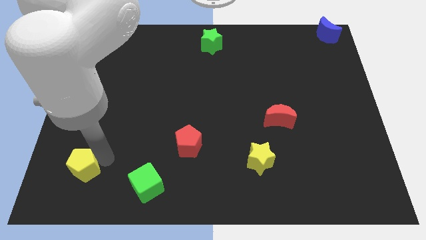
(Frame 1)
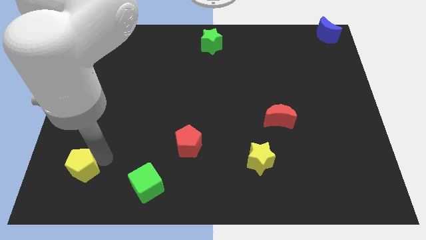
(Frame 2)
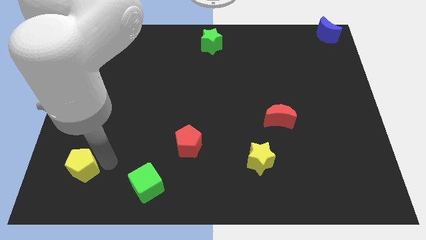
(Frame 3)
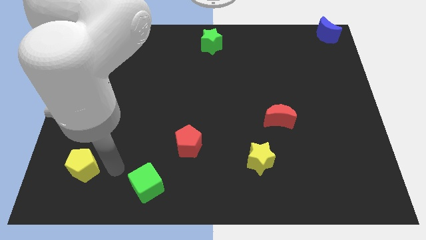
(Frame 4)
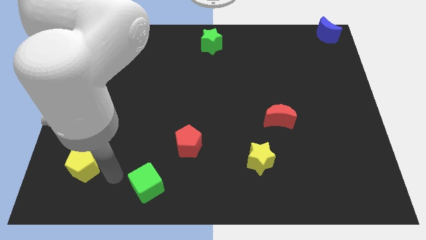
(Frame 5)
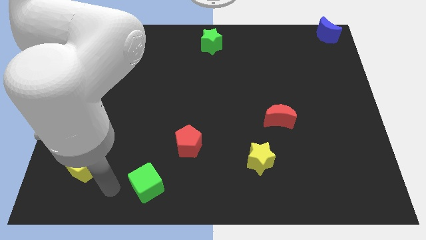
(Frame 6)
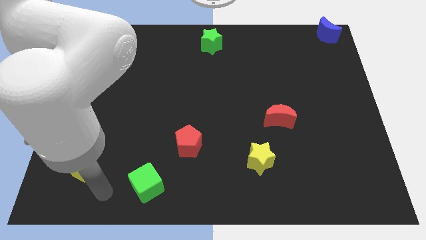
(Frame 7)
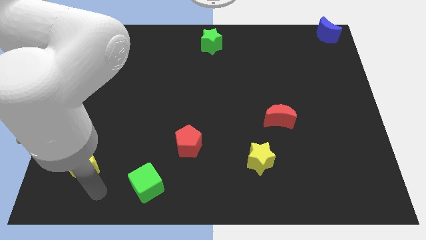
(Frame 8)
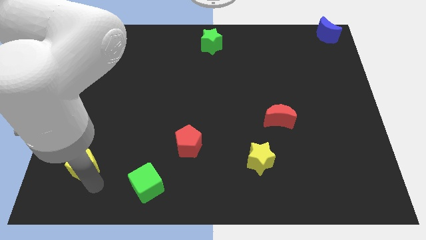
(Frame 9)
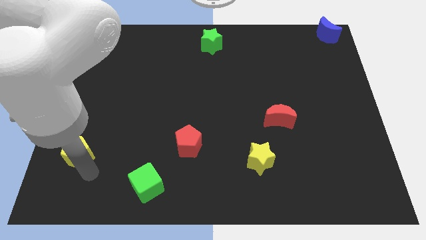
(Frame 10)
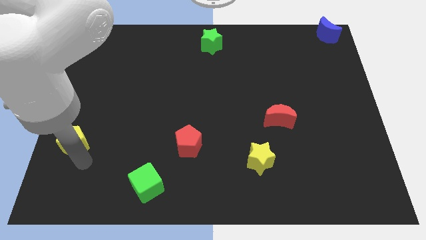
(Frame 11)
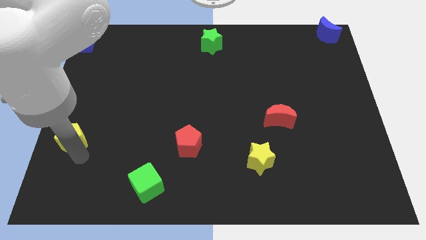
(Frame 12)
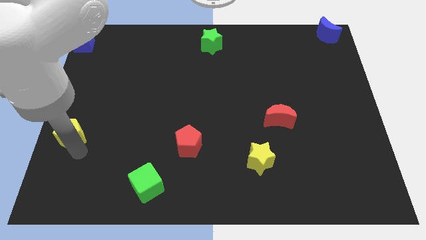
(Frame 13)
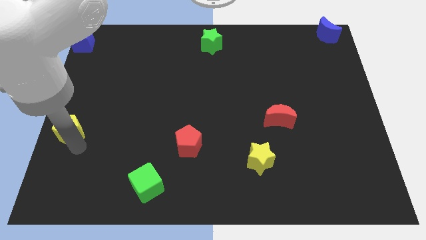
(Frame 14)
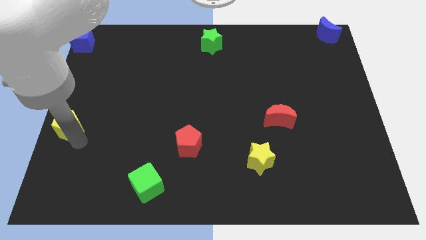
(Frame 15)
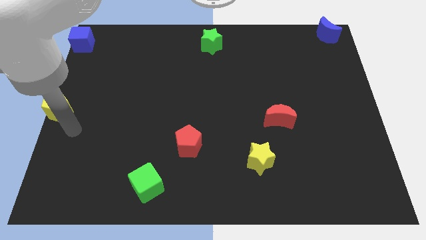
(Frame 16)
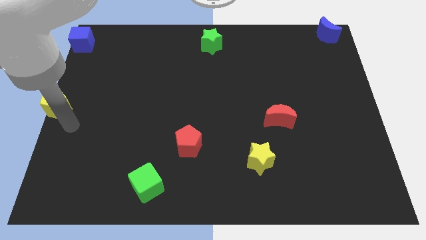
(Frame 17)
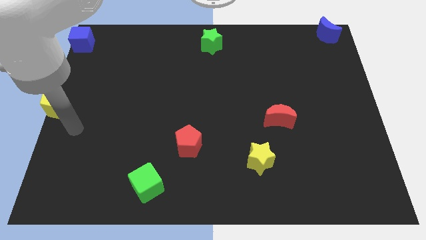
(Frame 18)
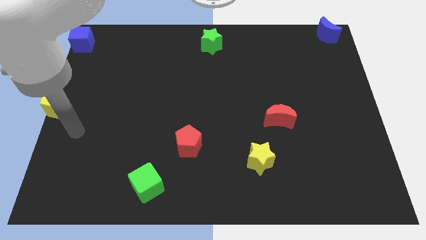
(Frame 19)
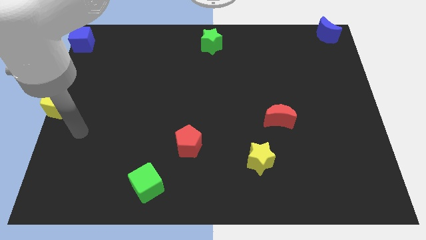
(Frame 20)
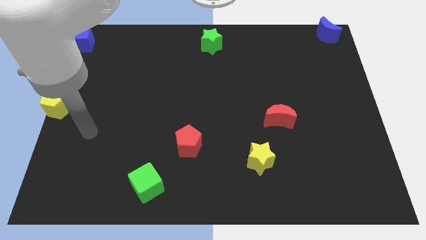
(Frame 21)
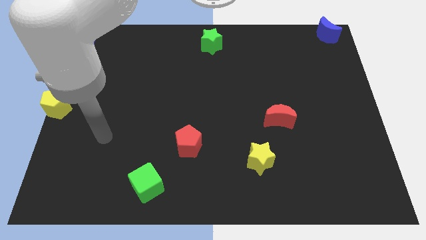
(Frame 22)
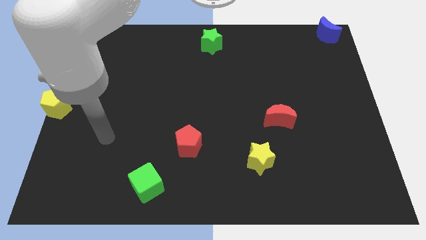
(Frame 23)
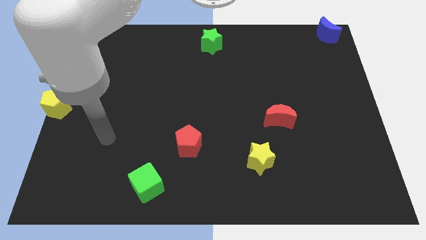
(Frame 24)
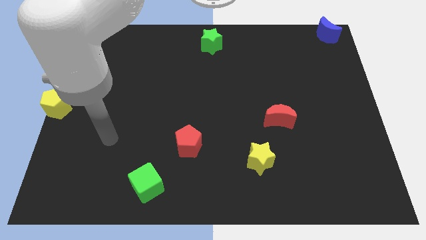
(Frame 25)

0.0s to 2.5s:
place the yellow pentagon below the blue cube

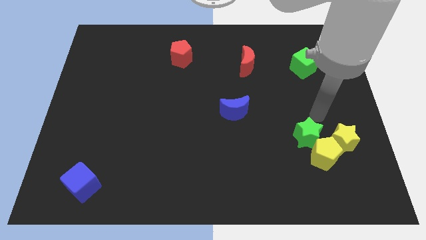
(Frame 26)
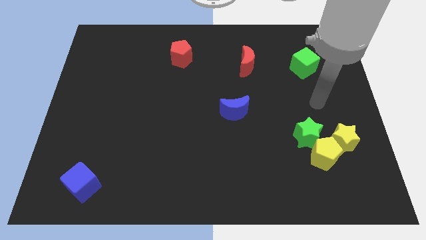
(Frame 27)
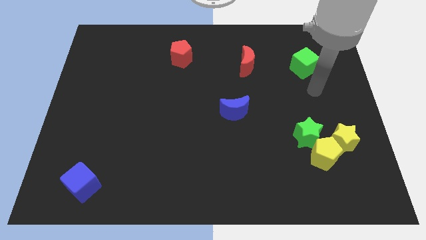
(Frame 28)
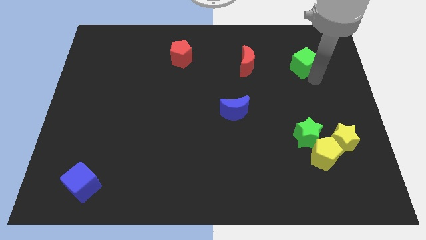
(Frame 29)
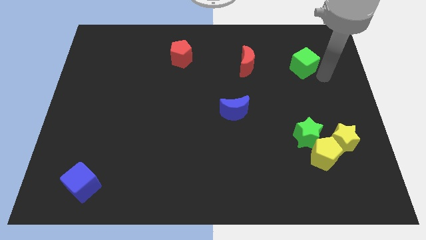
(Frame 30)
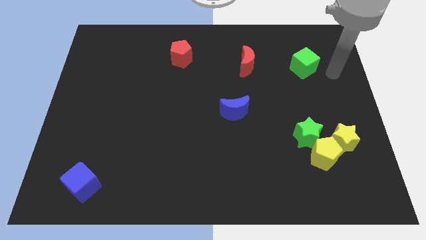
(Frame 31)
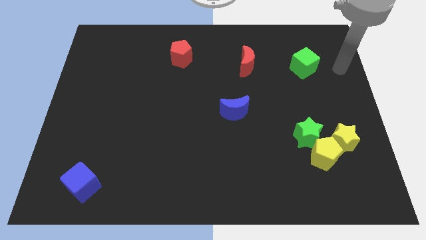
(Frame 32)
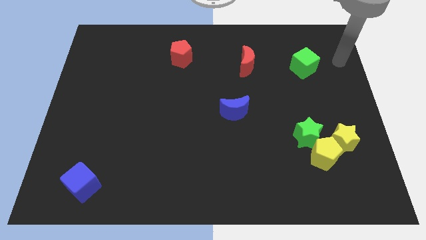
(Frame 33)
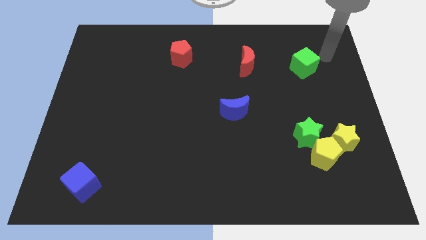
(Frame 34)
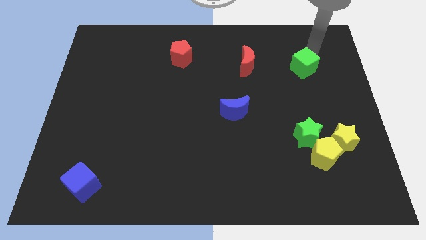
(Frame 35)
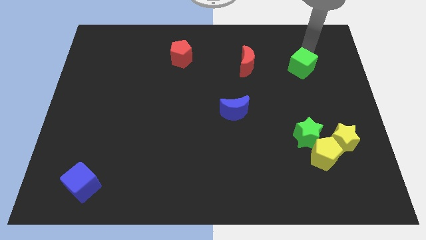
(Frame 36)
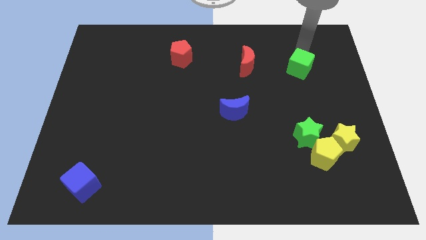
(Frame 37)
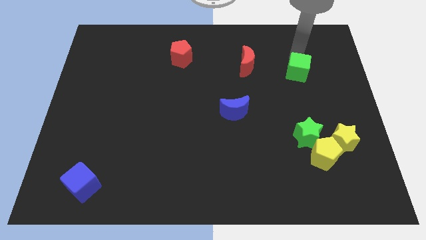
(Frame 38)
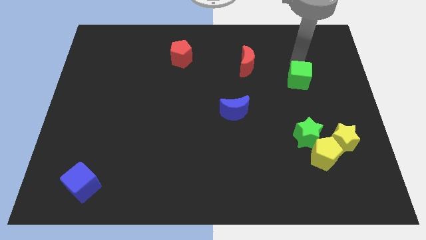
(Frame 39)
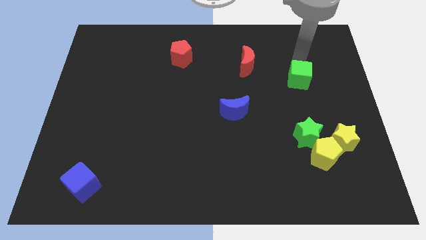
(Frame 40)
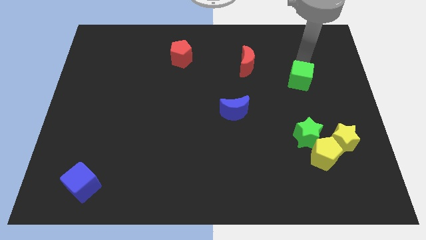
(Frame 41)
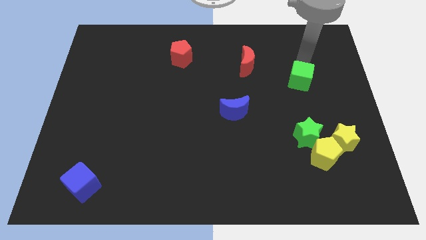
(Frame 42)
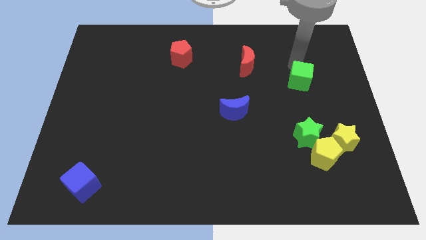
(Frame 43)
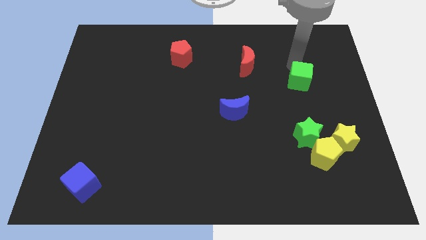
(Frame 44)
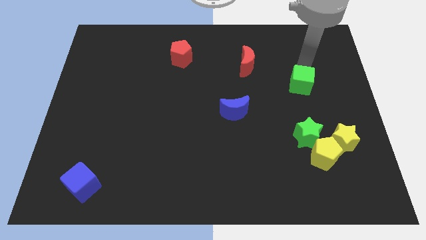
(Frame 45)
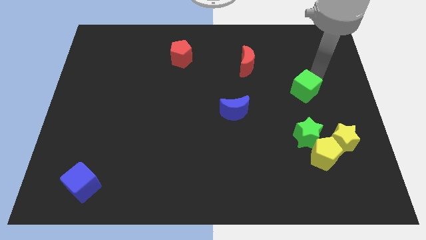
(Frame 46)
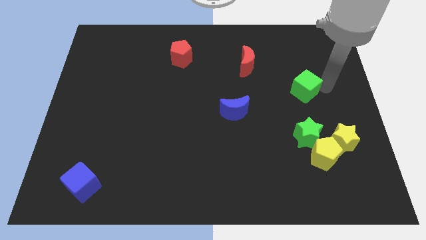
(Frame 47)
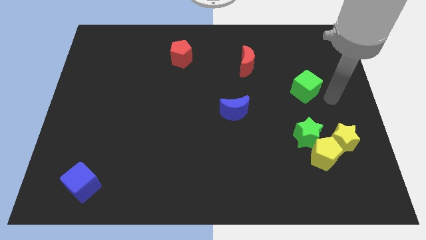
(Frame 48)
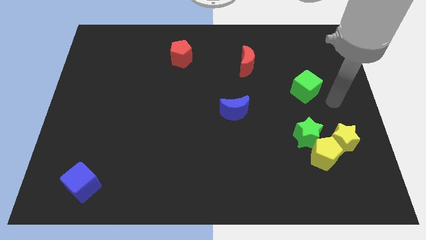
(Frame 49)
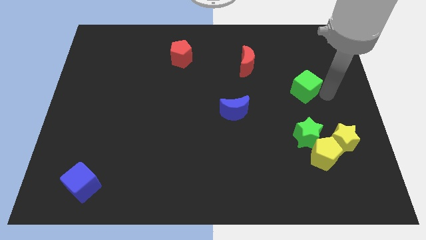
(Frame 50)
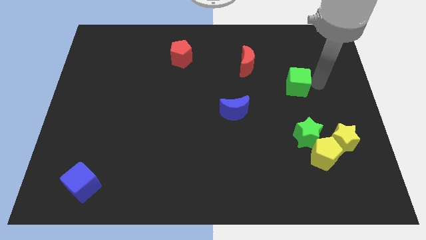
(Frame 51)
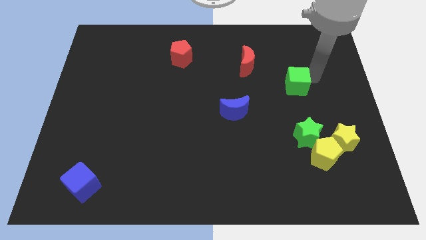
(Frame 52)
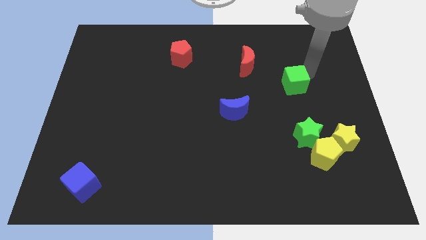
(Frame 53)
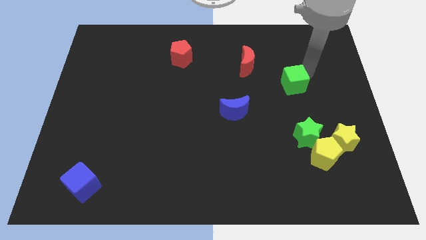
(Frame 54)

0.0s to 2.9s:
place the green cube diagonal to the blue moon

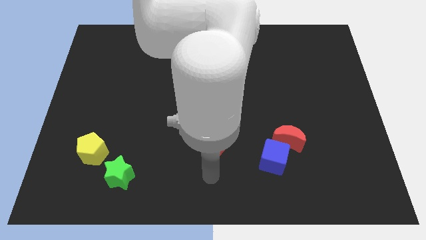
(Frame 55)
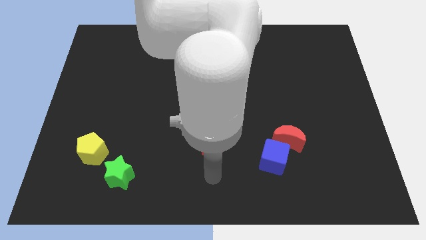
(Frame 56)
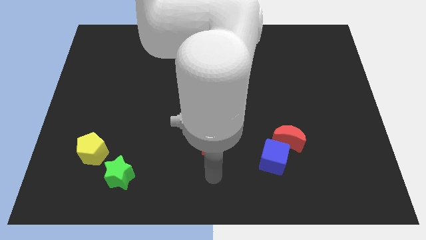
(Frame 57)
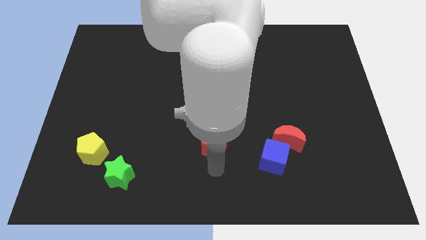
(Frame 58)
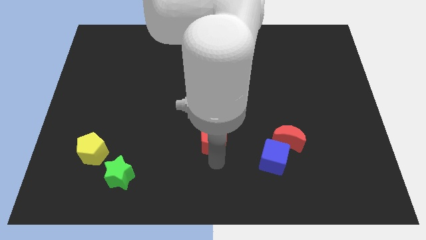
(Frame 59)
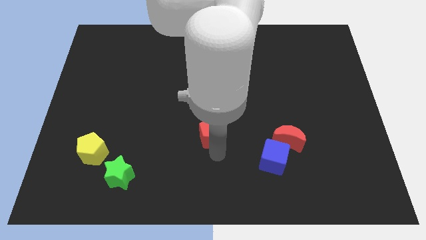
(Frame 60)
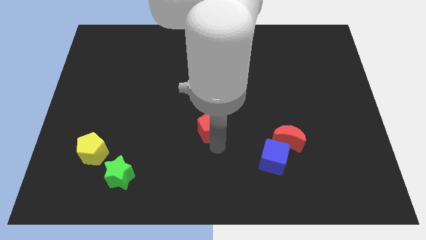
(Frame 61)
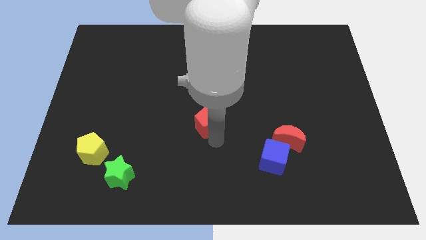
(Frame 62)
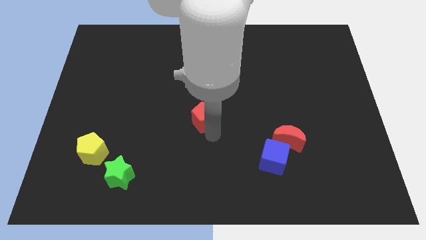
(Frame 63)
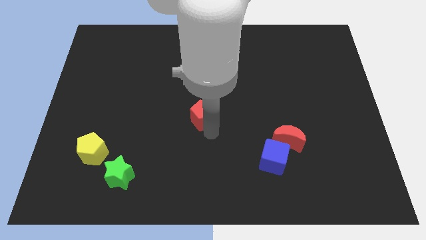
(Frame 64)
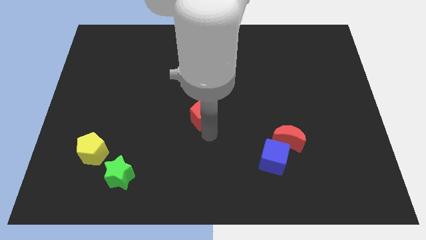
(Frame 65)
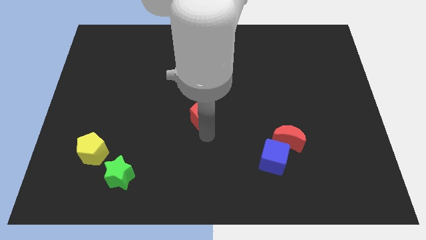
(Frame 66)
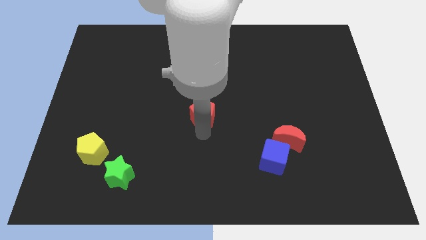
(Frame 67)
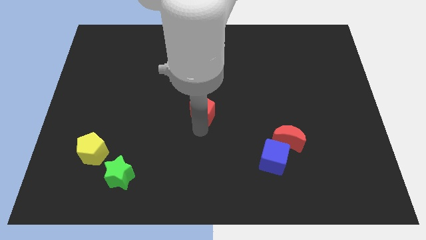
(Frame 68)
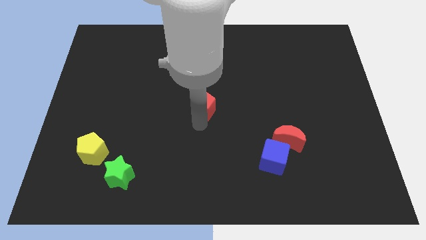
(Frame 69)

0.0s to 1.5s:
push the red pentagon to the center

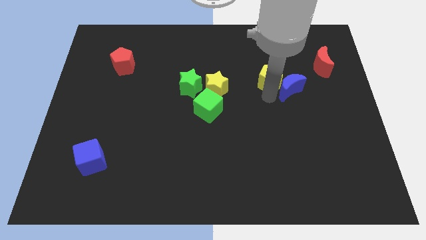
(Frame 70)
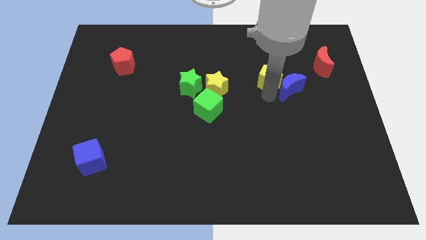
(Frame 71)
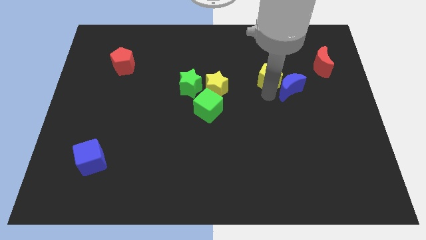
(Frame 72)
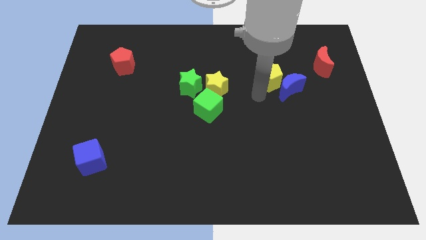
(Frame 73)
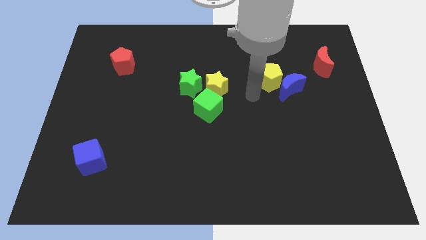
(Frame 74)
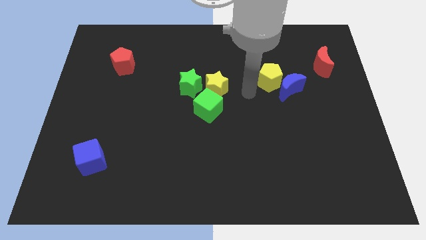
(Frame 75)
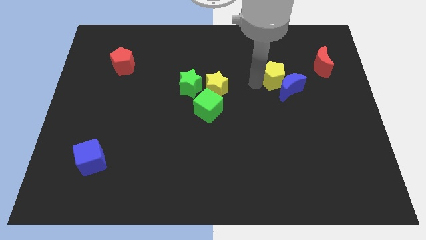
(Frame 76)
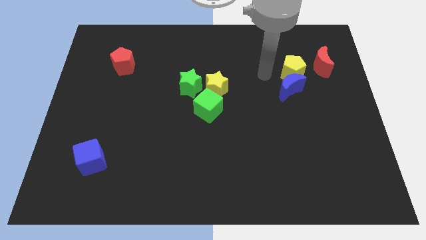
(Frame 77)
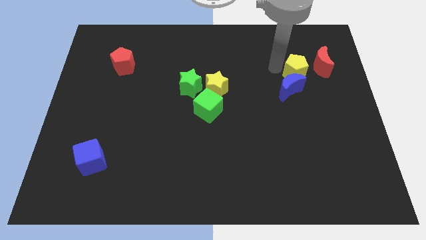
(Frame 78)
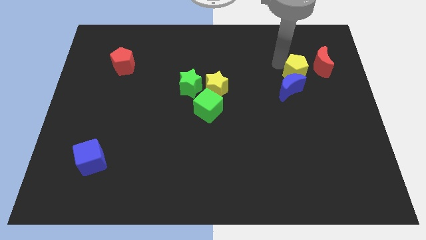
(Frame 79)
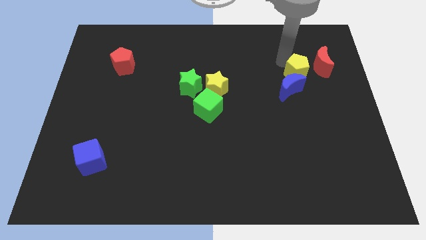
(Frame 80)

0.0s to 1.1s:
push the yellow pentagon above the blue crescent

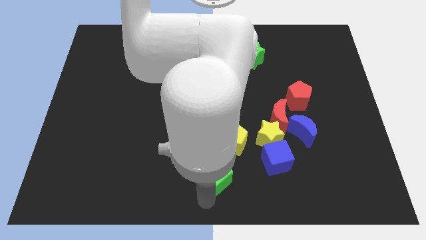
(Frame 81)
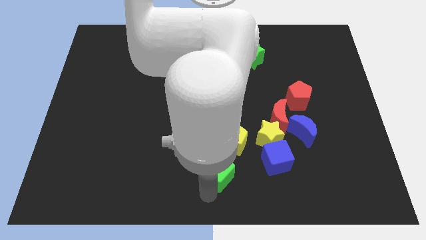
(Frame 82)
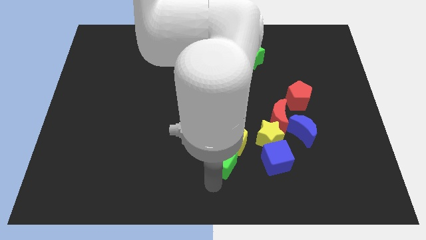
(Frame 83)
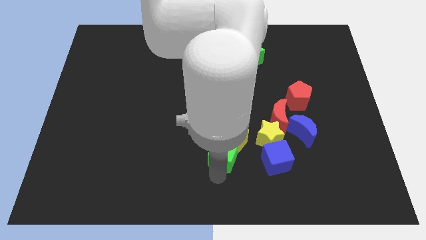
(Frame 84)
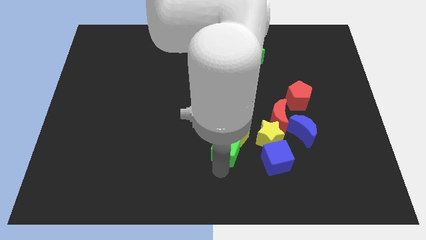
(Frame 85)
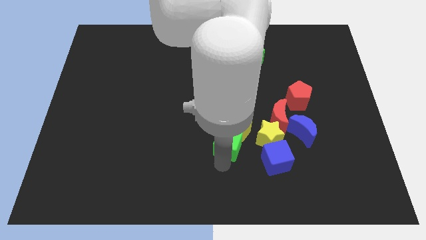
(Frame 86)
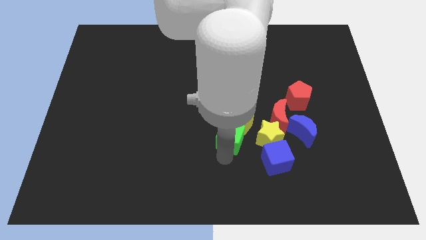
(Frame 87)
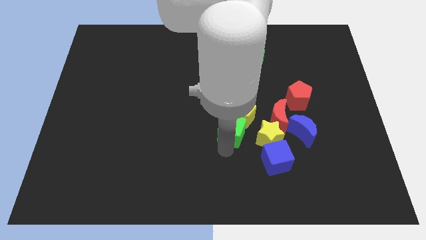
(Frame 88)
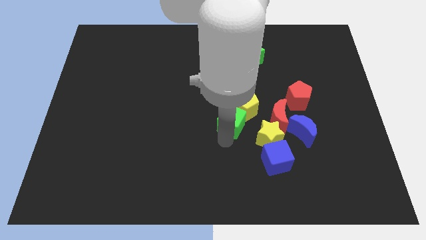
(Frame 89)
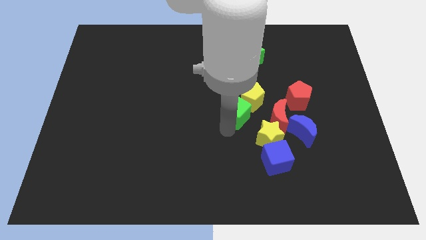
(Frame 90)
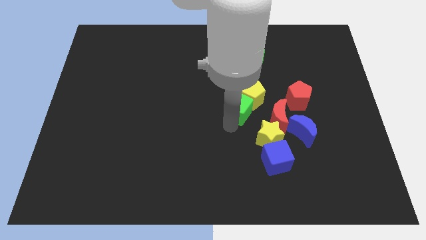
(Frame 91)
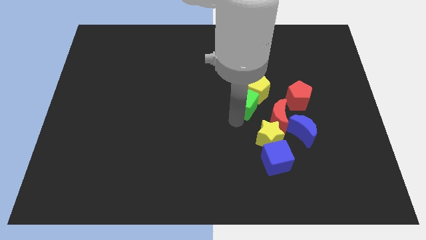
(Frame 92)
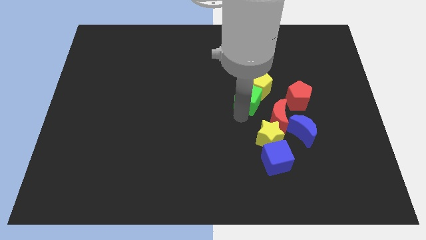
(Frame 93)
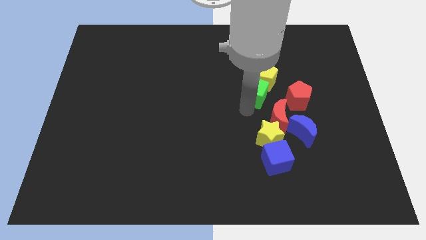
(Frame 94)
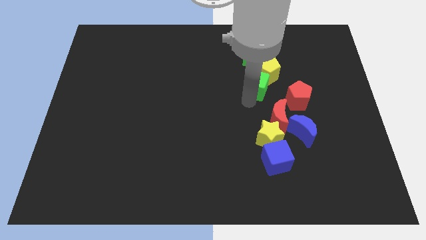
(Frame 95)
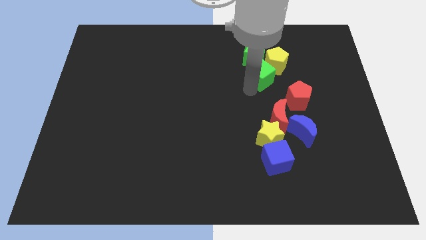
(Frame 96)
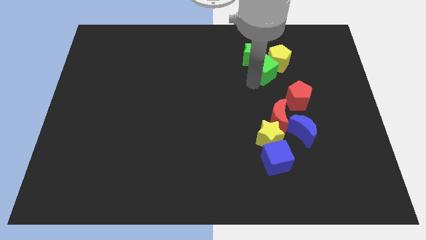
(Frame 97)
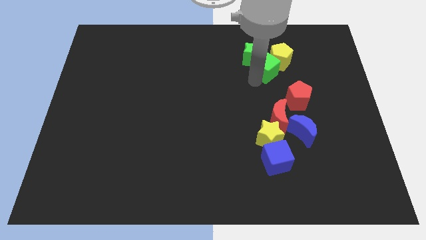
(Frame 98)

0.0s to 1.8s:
drag the green cube along with the yellow pentagon towards the top right side of the board
